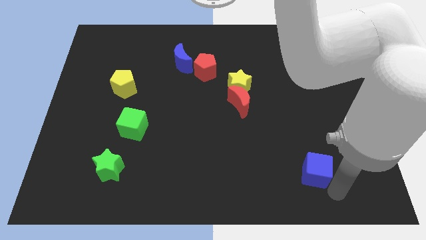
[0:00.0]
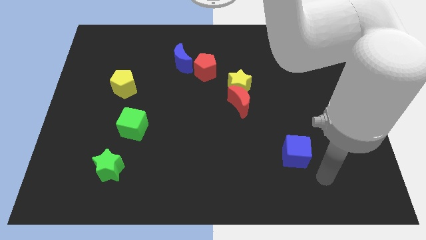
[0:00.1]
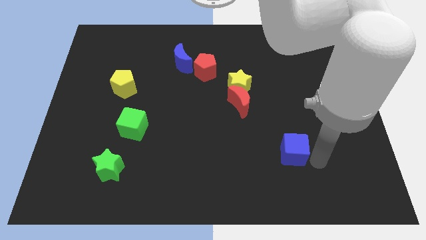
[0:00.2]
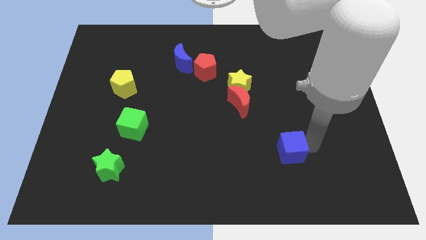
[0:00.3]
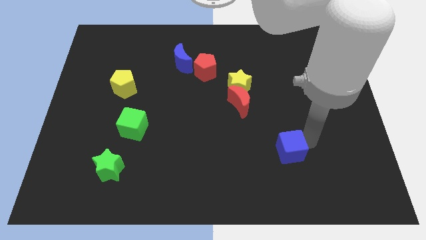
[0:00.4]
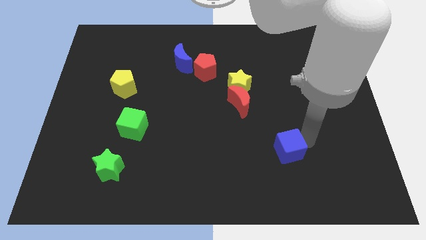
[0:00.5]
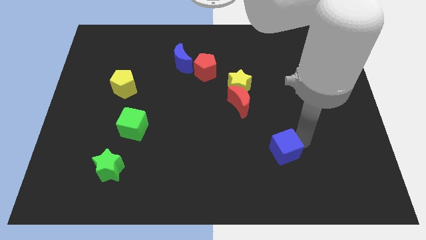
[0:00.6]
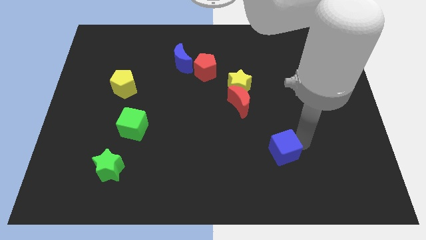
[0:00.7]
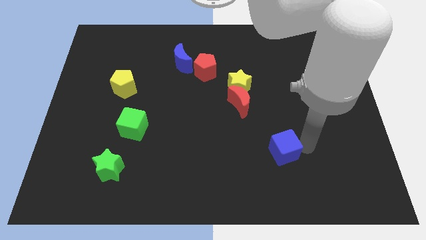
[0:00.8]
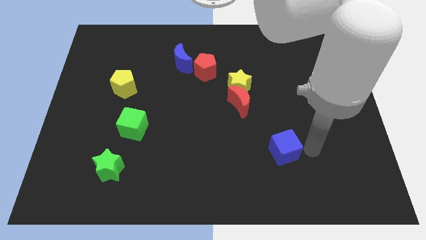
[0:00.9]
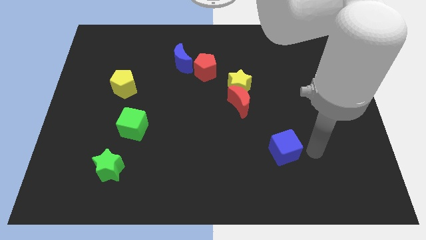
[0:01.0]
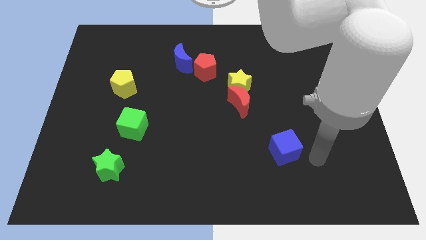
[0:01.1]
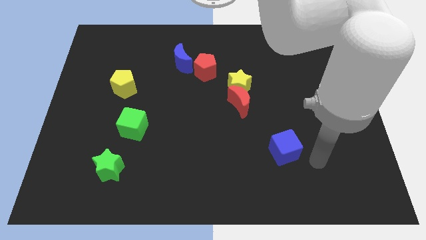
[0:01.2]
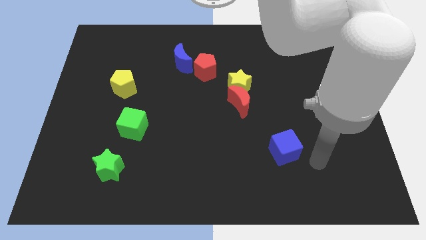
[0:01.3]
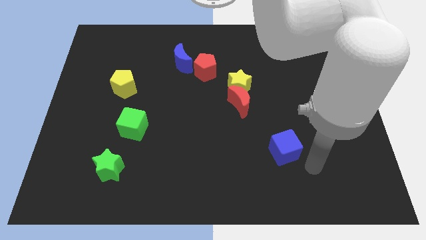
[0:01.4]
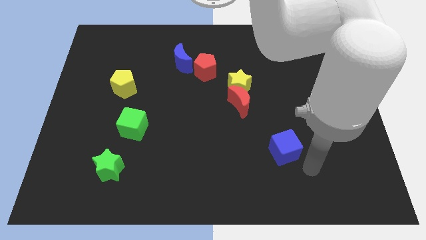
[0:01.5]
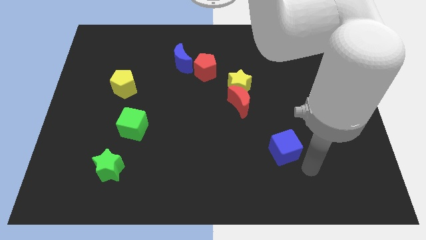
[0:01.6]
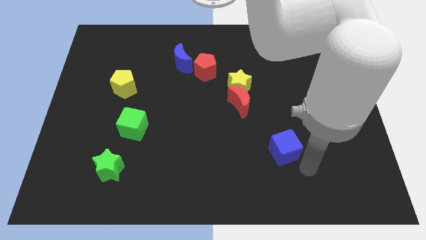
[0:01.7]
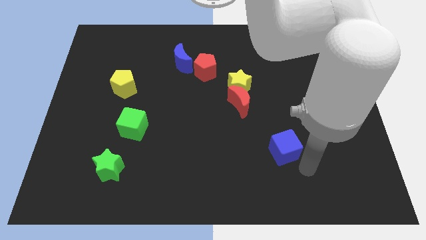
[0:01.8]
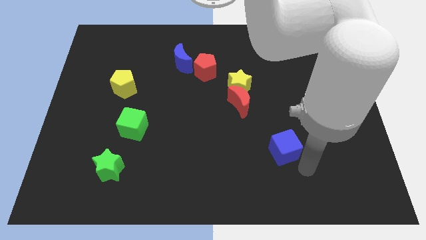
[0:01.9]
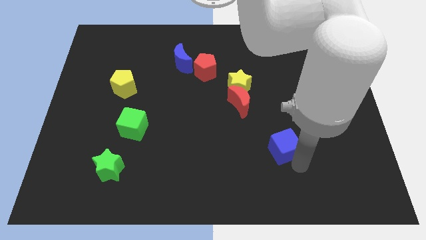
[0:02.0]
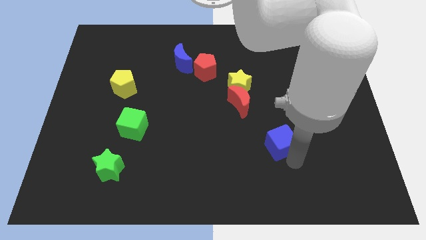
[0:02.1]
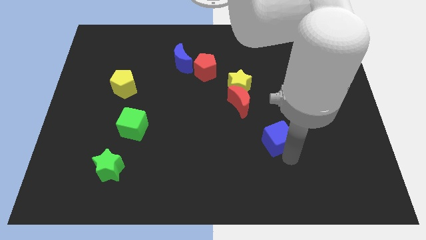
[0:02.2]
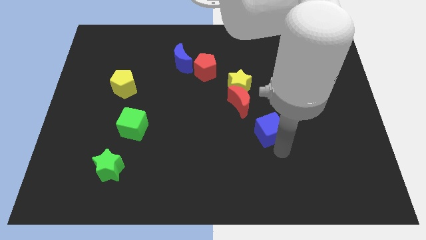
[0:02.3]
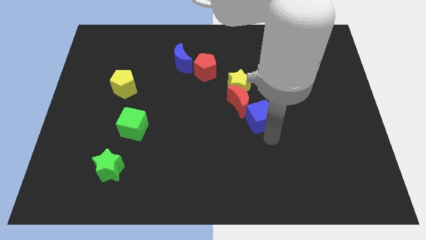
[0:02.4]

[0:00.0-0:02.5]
push the blue cube to the right of the red crescent

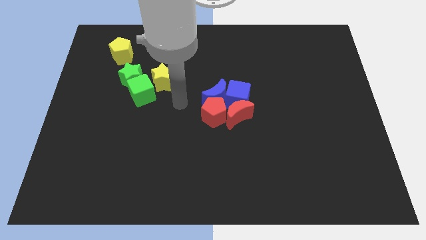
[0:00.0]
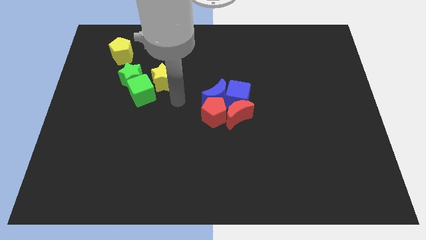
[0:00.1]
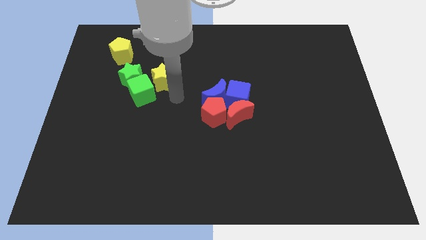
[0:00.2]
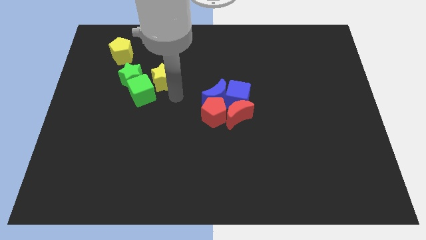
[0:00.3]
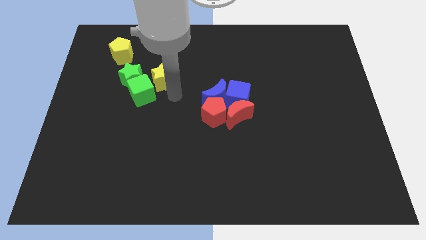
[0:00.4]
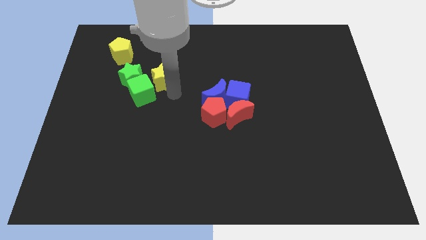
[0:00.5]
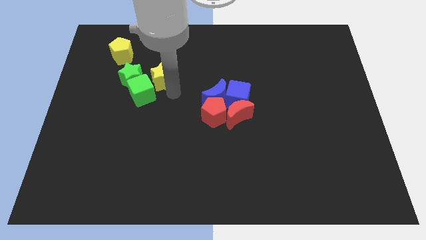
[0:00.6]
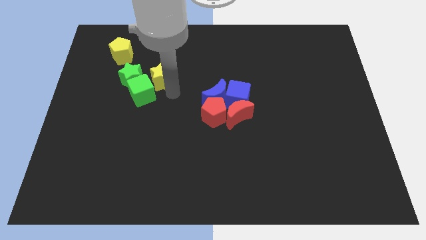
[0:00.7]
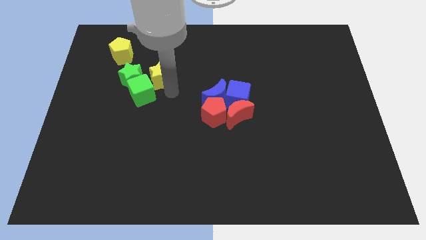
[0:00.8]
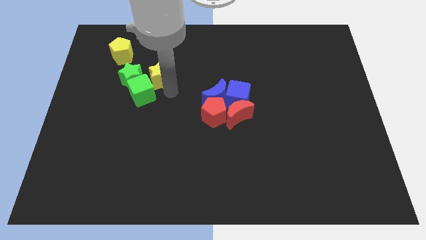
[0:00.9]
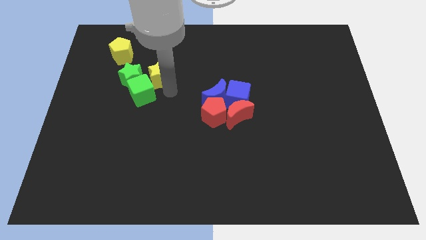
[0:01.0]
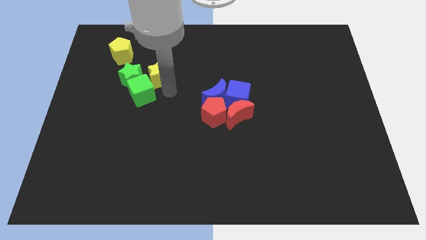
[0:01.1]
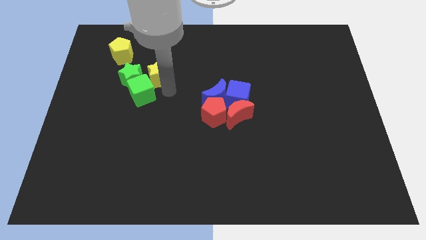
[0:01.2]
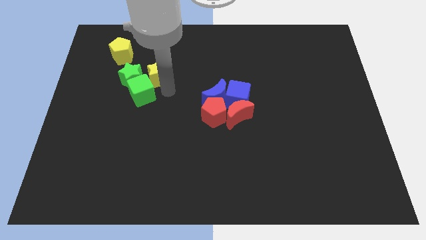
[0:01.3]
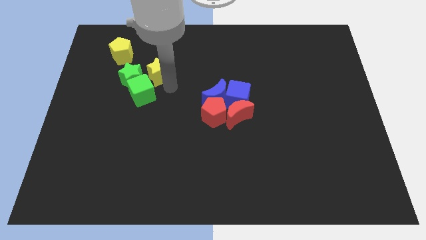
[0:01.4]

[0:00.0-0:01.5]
put the yellow star to the right side of the green star

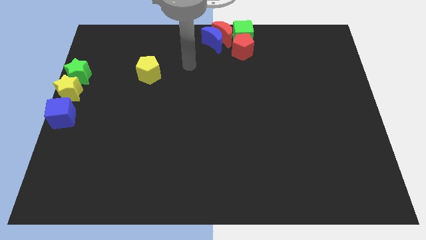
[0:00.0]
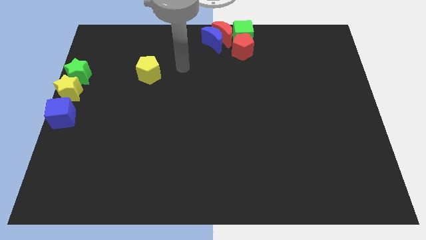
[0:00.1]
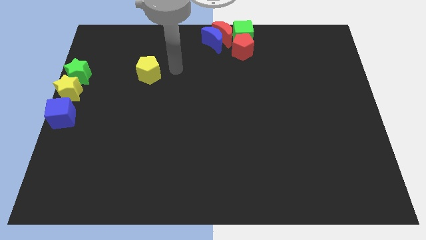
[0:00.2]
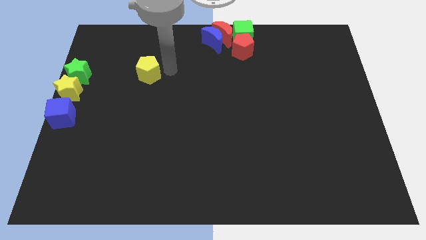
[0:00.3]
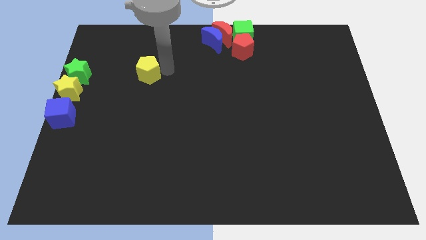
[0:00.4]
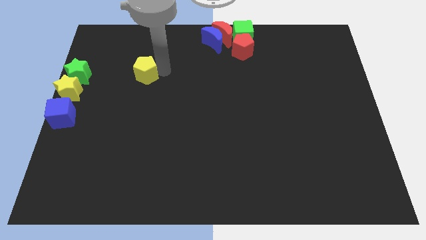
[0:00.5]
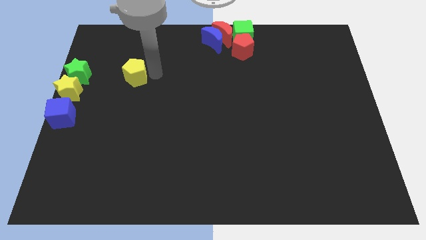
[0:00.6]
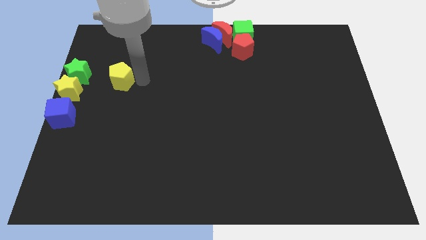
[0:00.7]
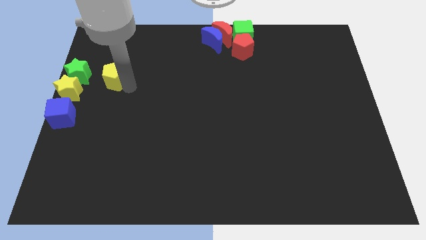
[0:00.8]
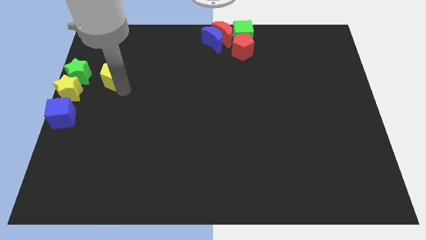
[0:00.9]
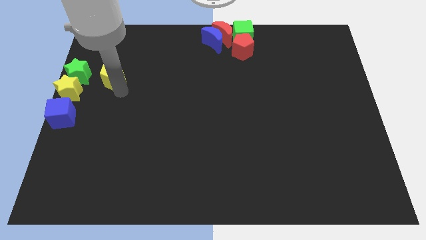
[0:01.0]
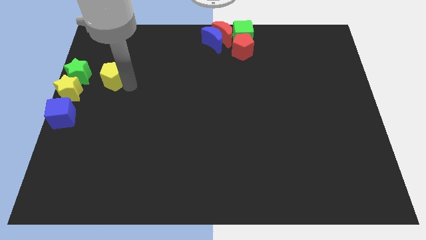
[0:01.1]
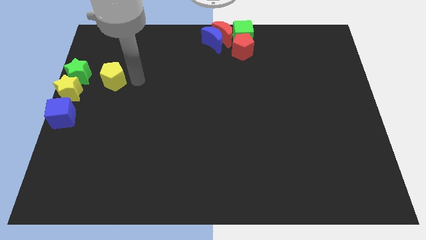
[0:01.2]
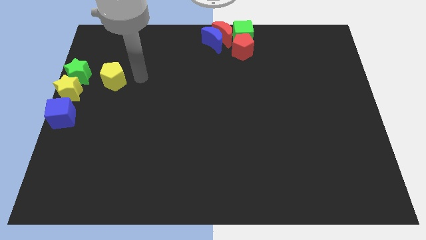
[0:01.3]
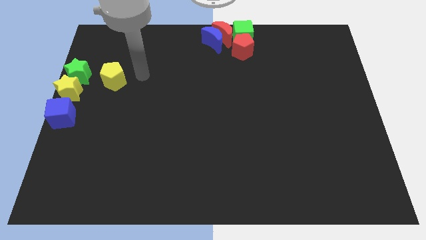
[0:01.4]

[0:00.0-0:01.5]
move the yellow pentagon right to the green star

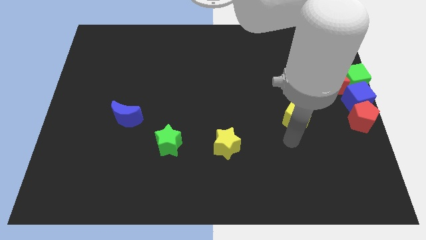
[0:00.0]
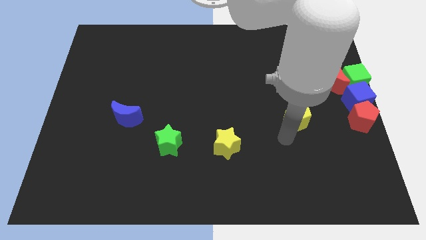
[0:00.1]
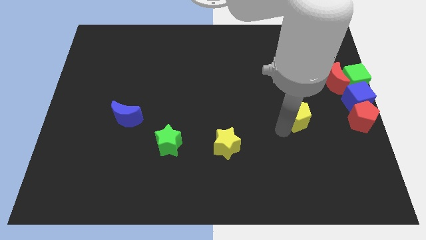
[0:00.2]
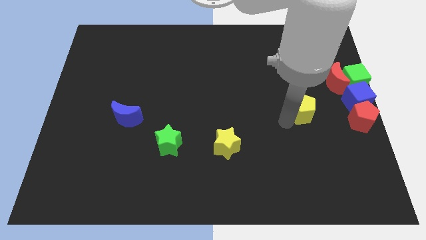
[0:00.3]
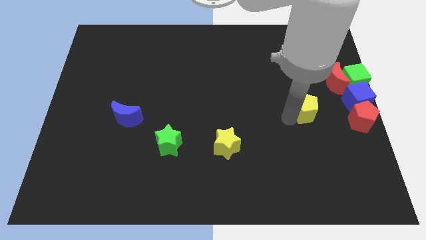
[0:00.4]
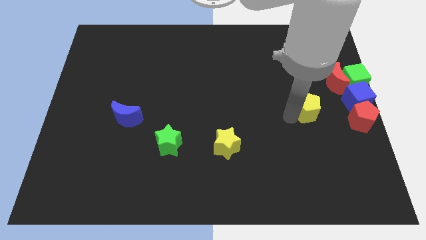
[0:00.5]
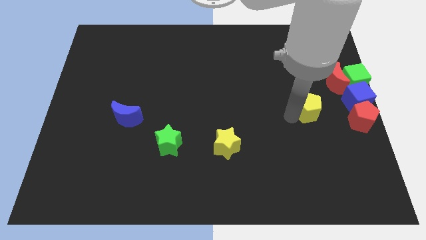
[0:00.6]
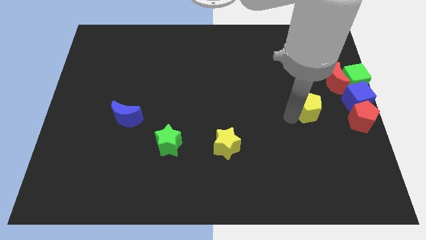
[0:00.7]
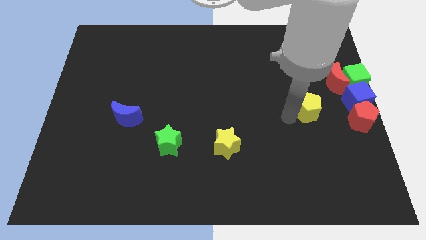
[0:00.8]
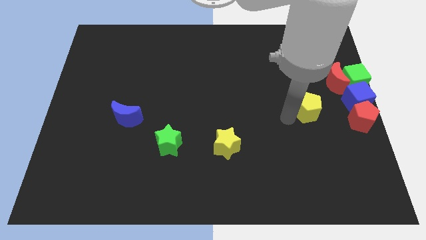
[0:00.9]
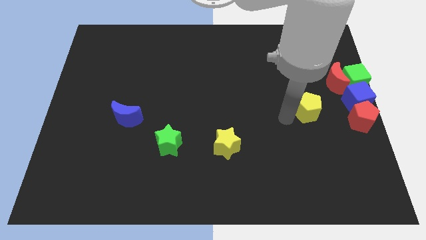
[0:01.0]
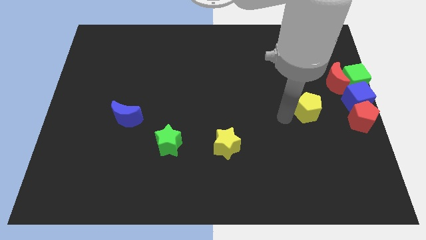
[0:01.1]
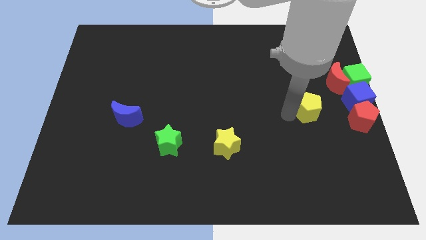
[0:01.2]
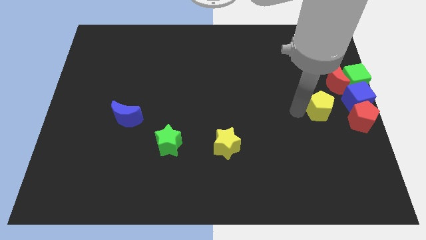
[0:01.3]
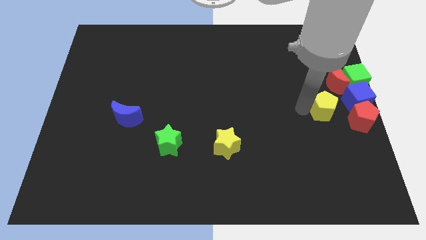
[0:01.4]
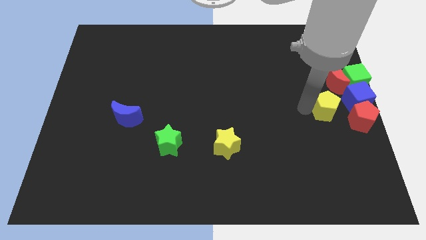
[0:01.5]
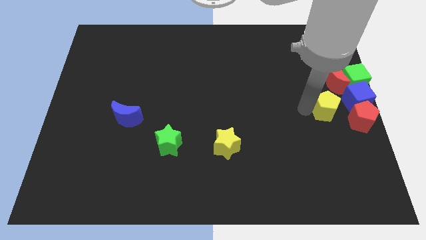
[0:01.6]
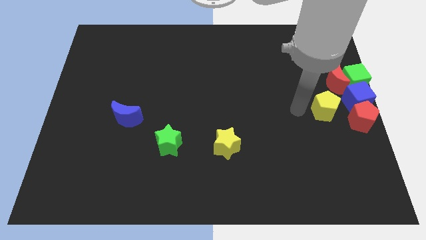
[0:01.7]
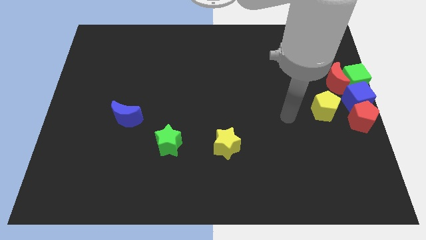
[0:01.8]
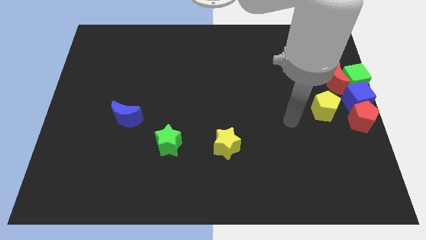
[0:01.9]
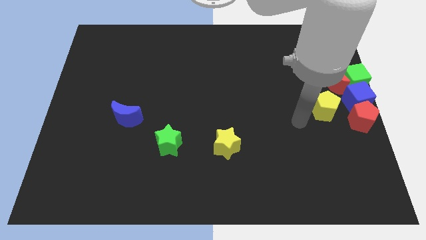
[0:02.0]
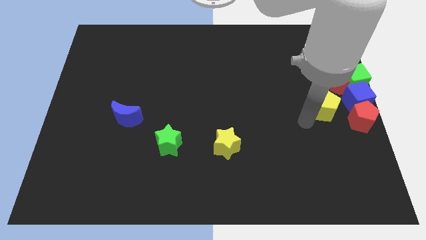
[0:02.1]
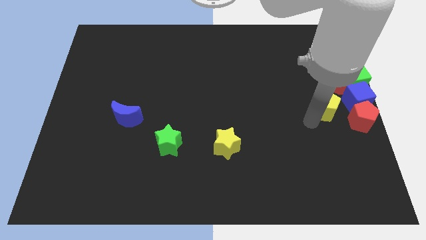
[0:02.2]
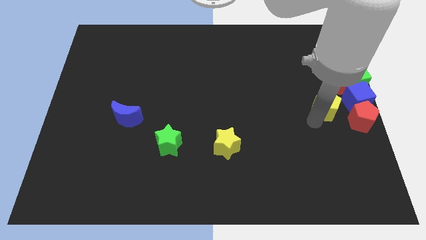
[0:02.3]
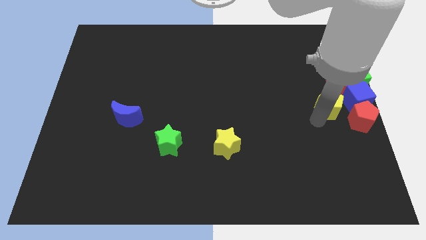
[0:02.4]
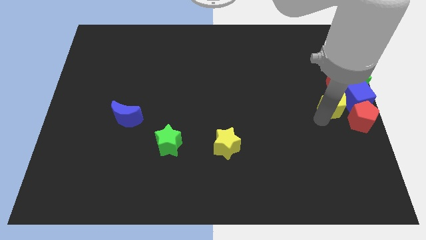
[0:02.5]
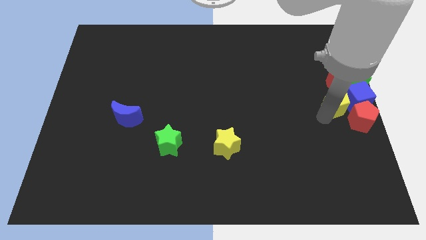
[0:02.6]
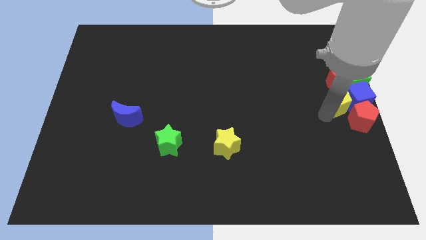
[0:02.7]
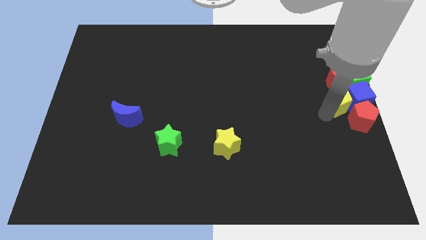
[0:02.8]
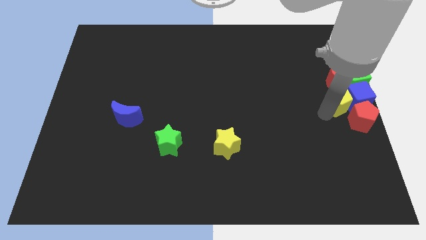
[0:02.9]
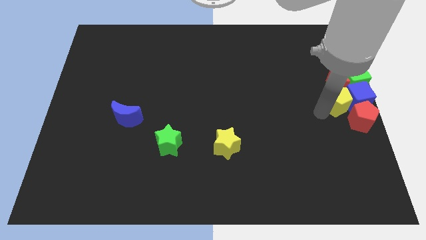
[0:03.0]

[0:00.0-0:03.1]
place the yellow pentagon left to the blue cube

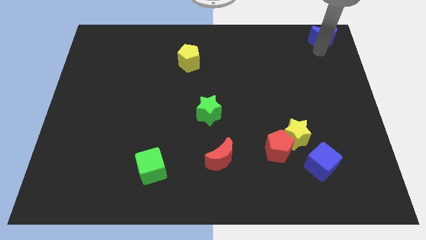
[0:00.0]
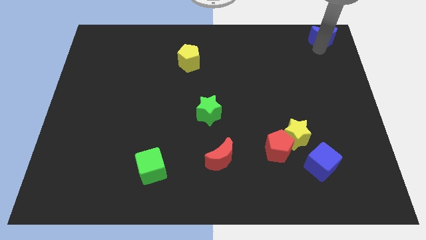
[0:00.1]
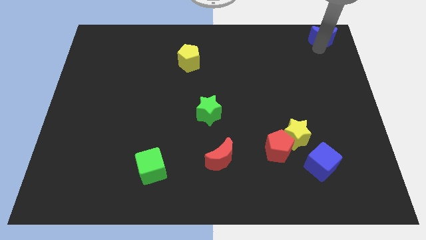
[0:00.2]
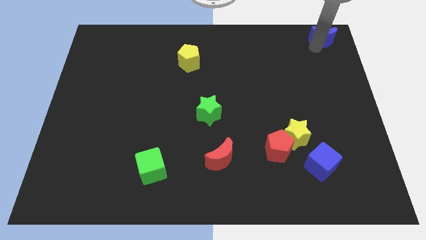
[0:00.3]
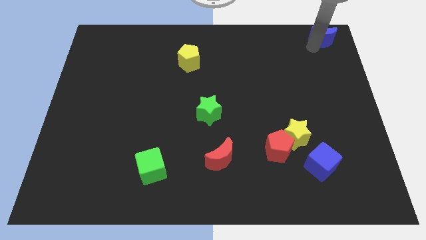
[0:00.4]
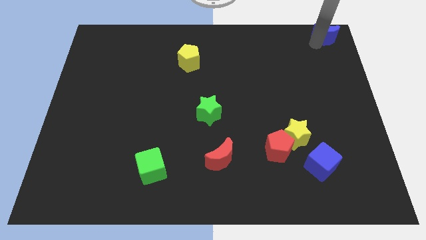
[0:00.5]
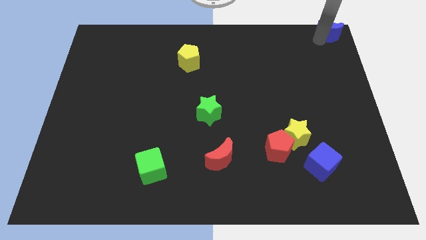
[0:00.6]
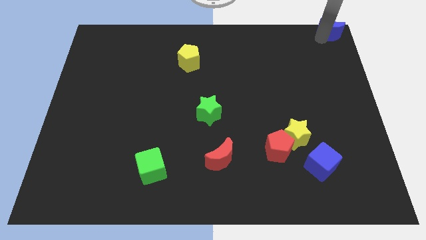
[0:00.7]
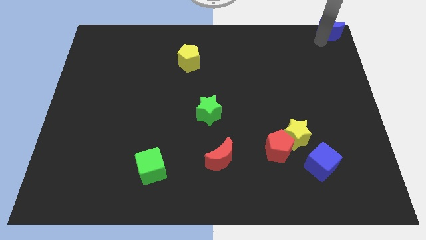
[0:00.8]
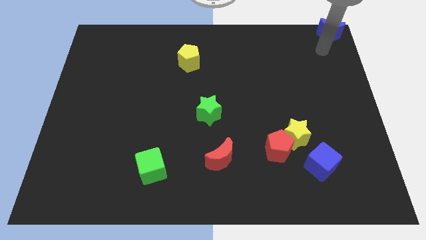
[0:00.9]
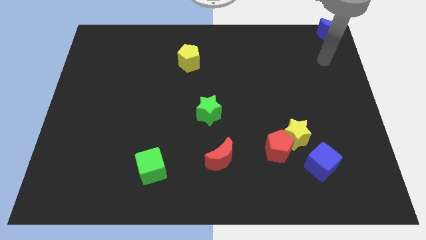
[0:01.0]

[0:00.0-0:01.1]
move blue moon to the top right corner
